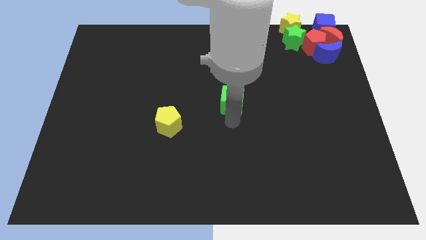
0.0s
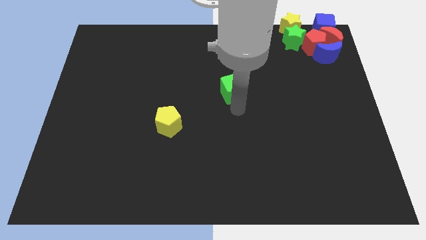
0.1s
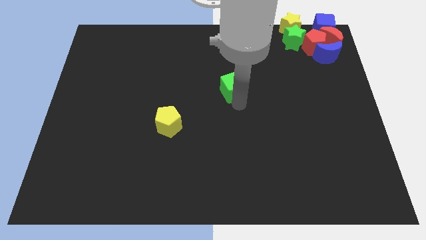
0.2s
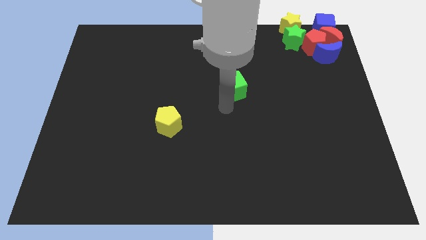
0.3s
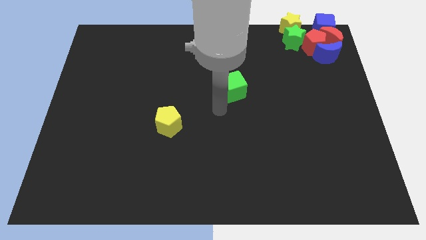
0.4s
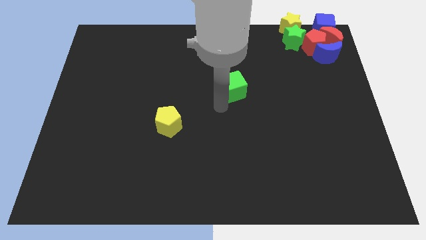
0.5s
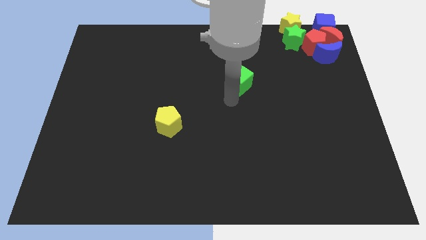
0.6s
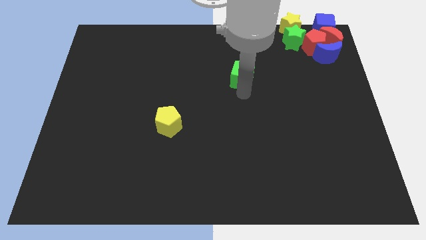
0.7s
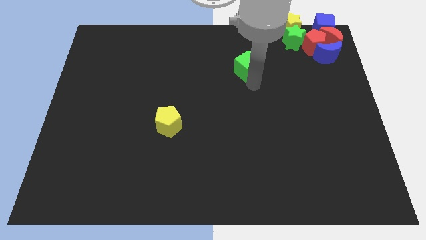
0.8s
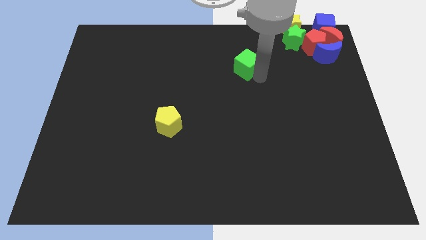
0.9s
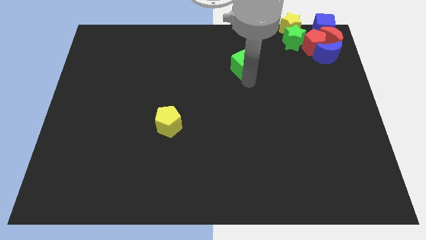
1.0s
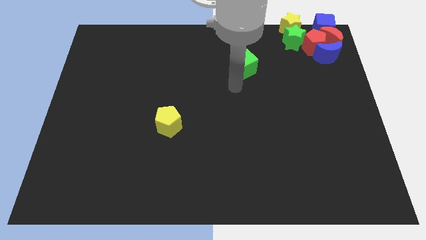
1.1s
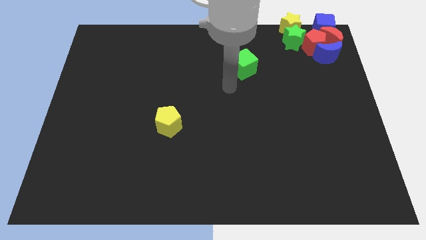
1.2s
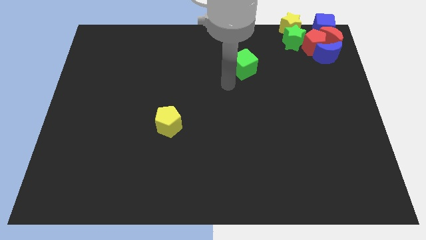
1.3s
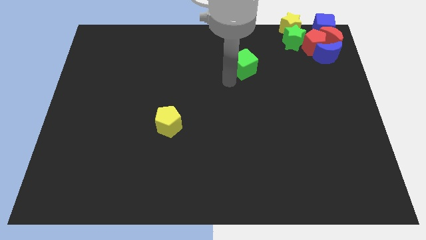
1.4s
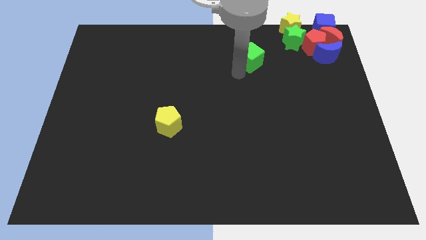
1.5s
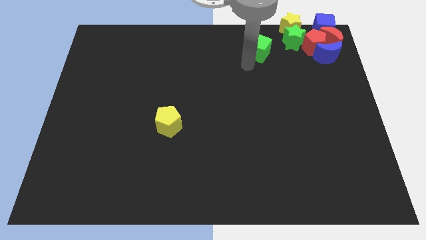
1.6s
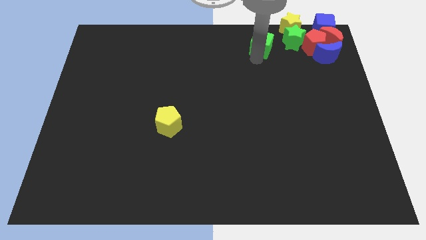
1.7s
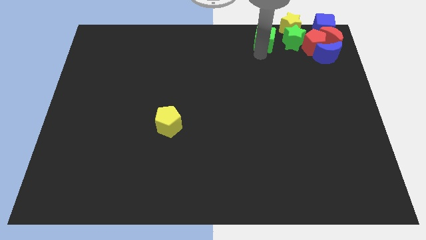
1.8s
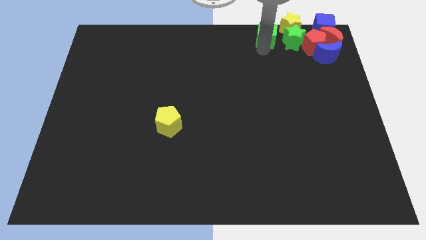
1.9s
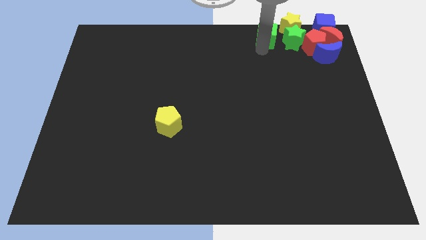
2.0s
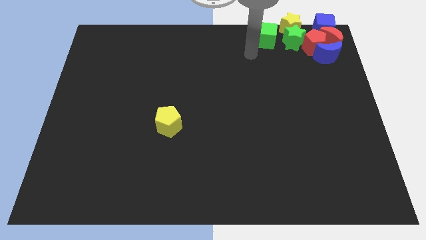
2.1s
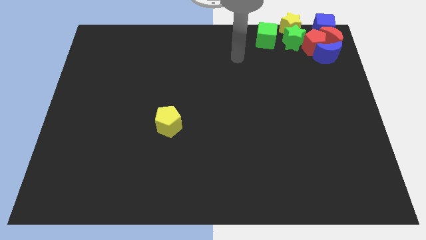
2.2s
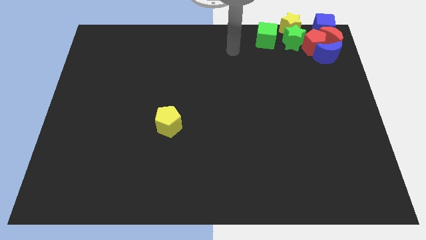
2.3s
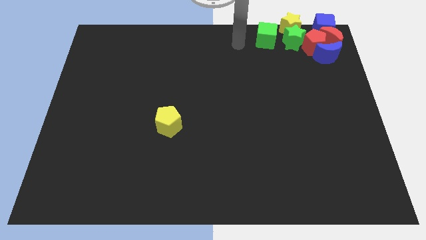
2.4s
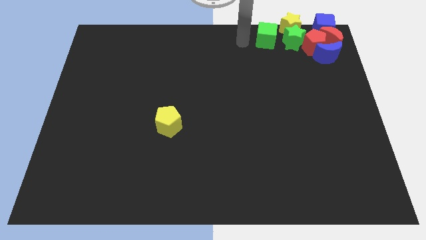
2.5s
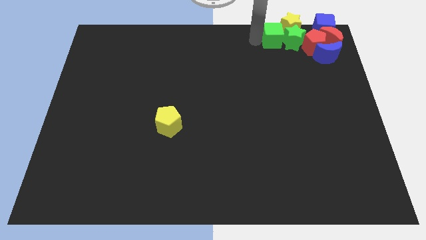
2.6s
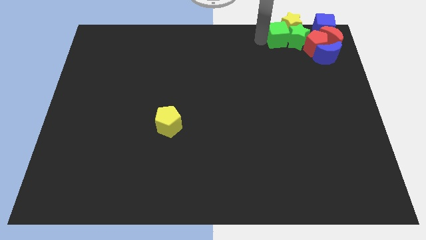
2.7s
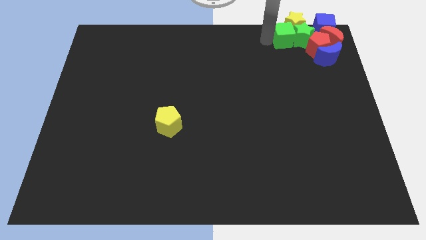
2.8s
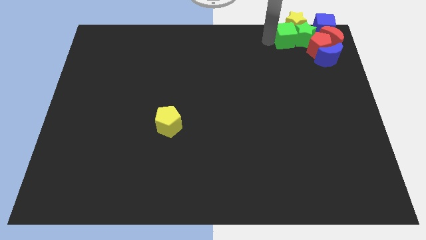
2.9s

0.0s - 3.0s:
move green cube left beside the green star

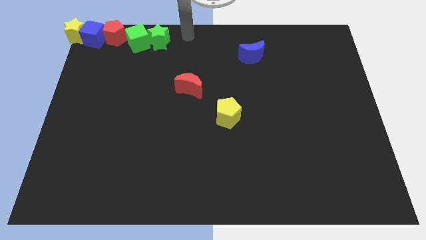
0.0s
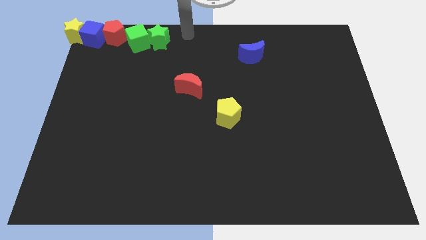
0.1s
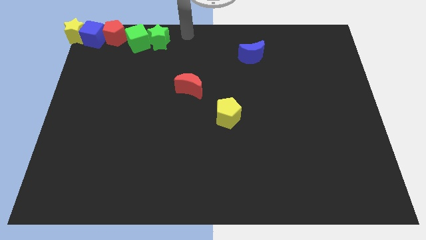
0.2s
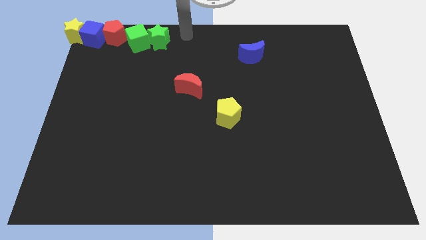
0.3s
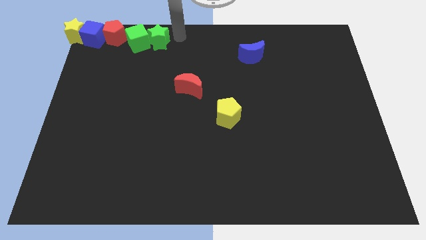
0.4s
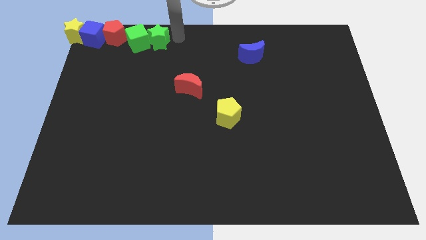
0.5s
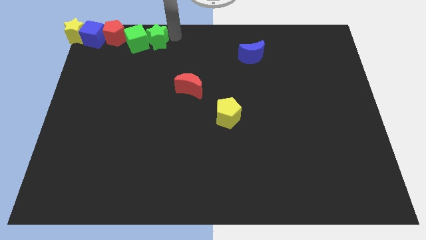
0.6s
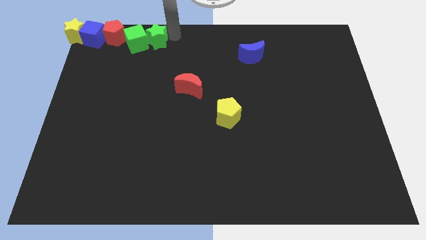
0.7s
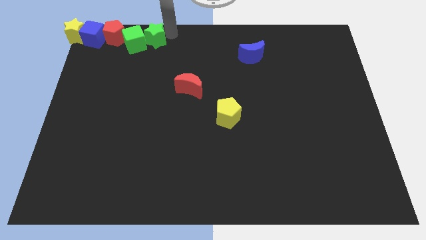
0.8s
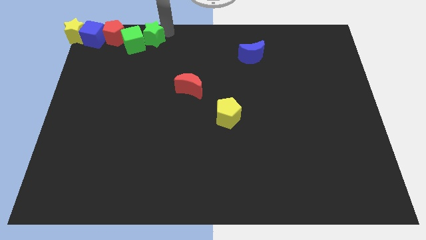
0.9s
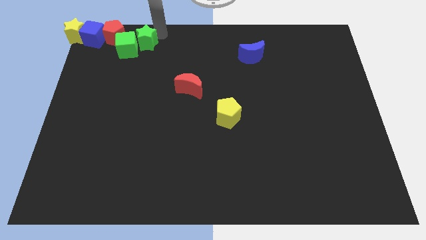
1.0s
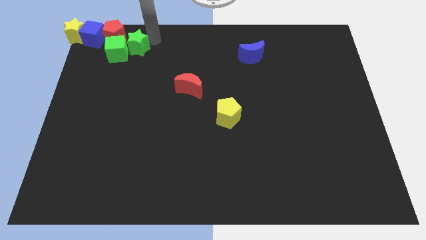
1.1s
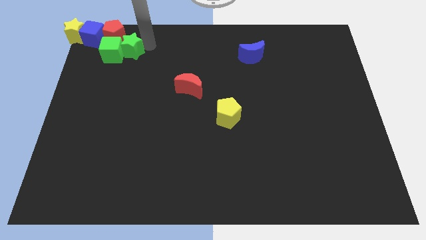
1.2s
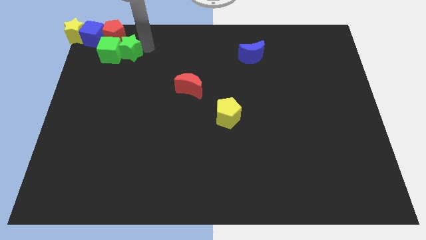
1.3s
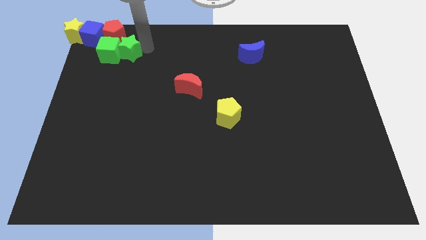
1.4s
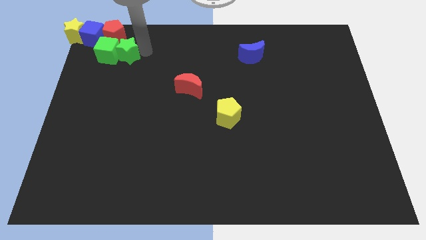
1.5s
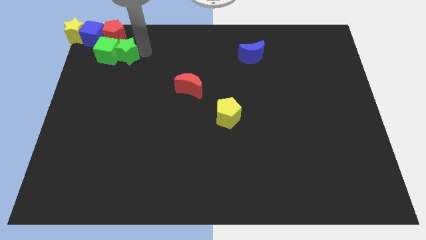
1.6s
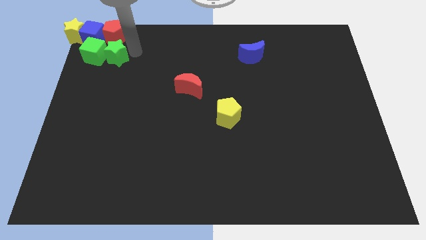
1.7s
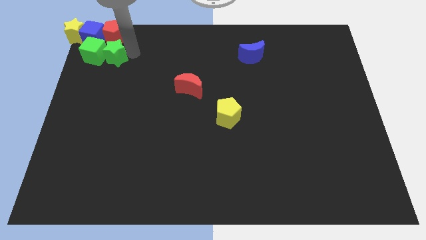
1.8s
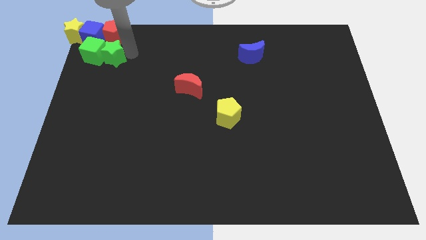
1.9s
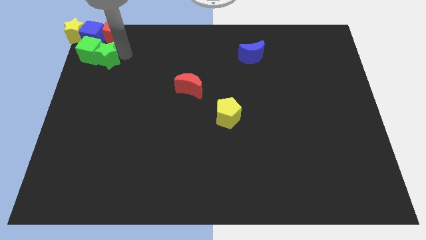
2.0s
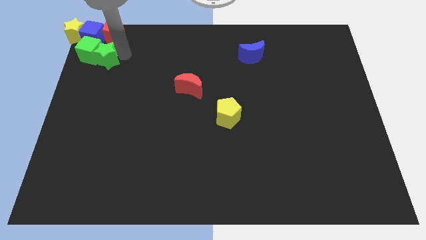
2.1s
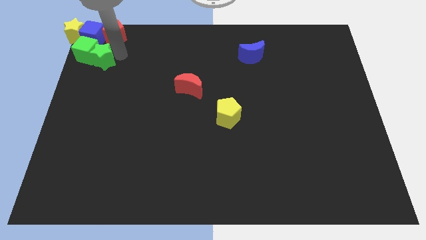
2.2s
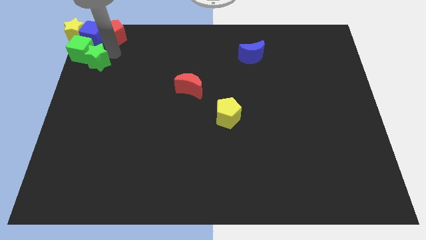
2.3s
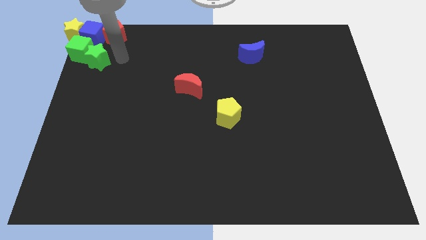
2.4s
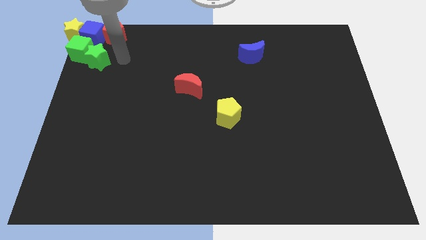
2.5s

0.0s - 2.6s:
push the green star and cube to the bottom of the blue cube and yellow star

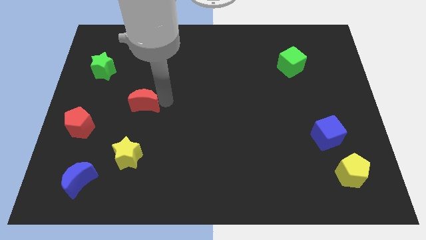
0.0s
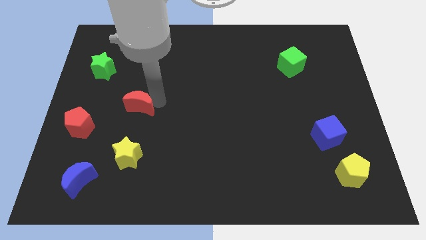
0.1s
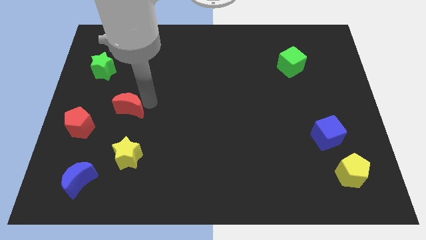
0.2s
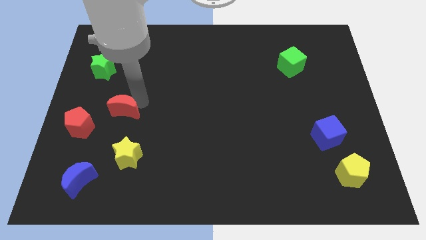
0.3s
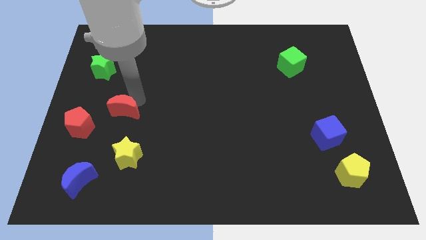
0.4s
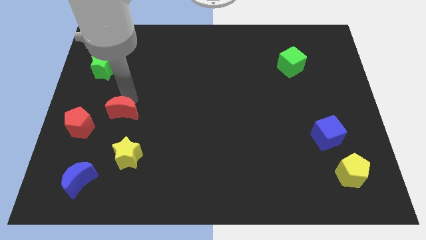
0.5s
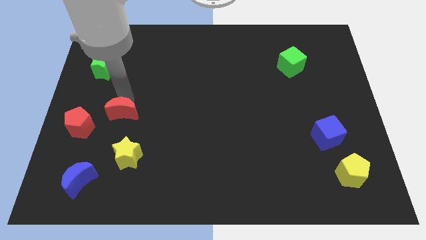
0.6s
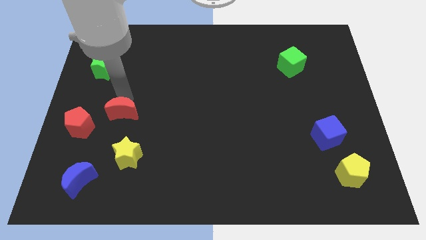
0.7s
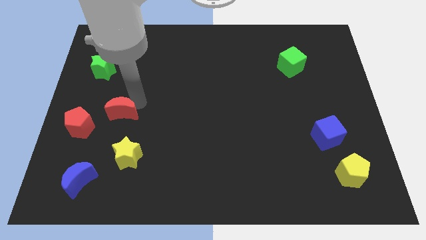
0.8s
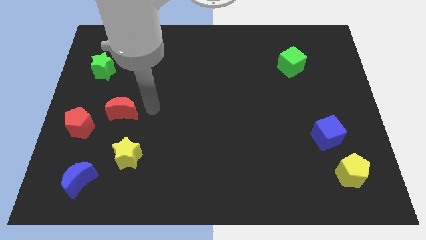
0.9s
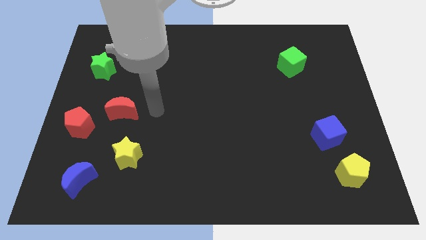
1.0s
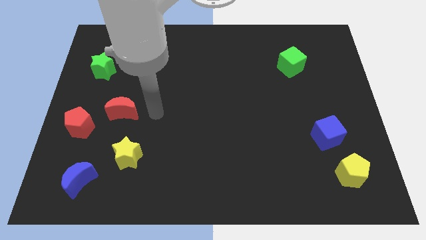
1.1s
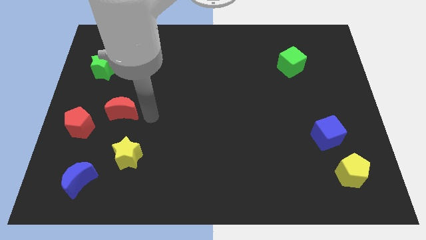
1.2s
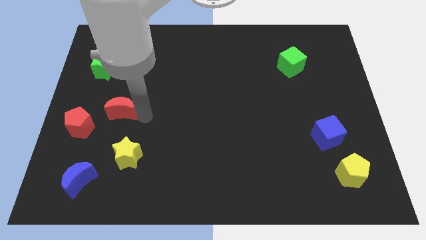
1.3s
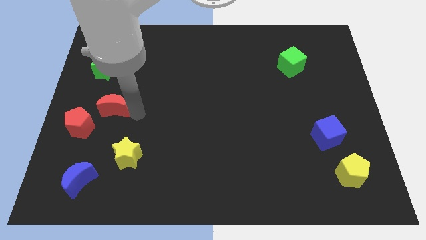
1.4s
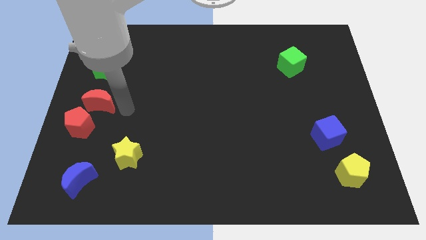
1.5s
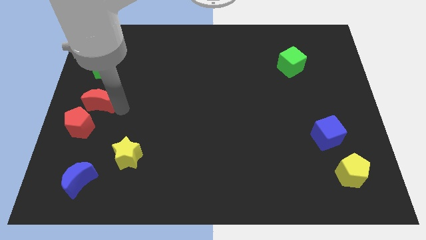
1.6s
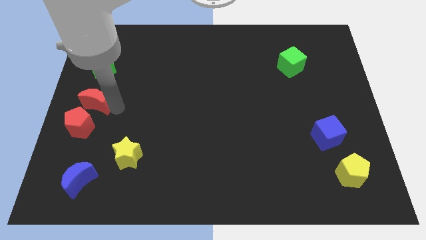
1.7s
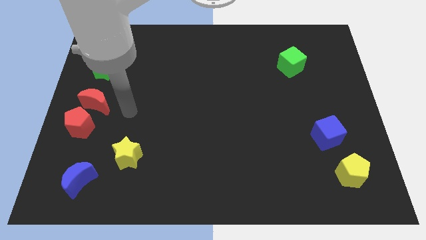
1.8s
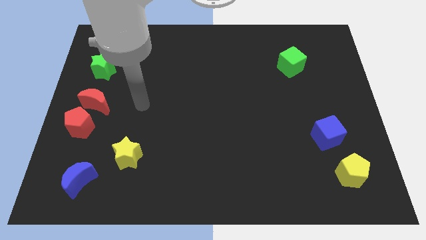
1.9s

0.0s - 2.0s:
place red crescent on top of red penatgon

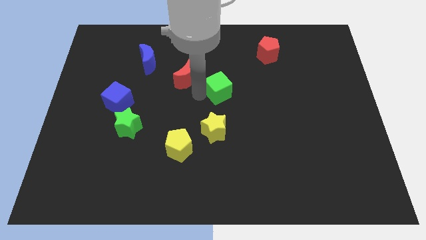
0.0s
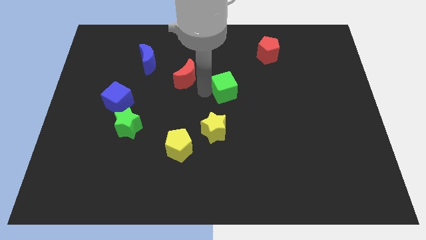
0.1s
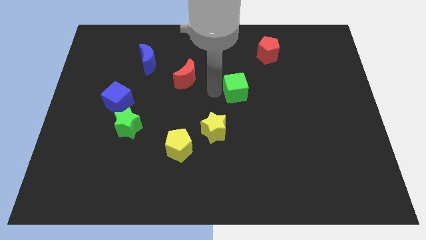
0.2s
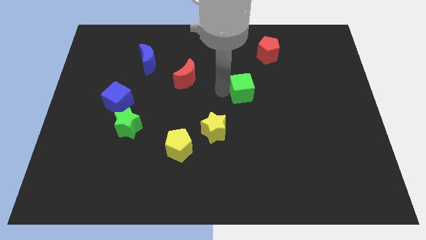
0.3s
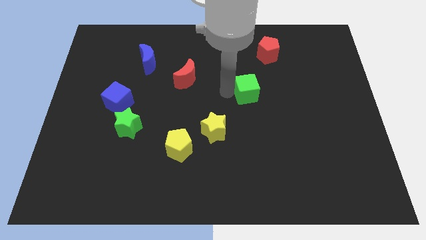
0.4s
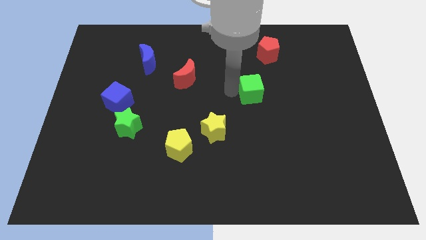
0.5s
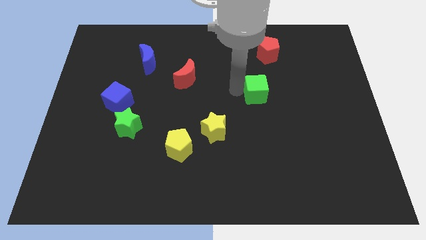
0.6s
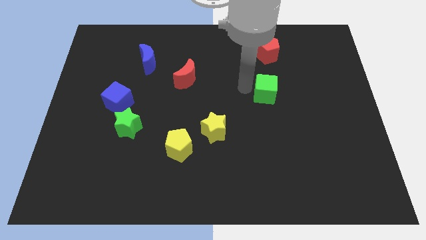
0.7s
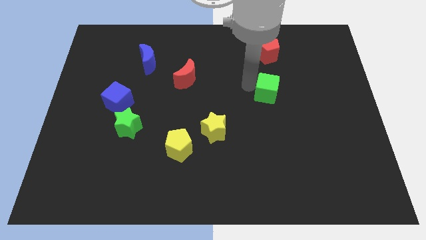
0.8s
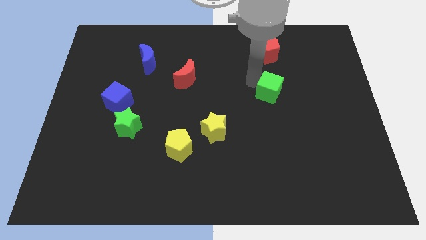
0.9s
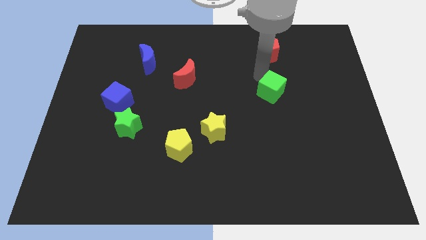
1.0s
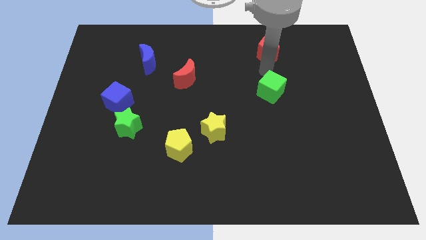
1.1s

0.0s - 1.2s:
move the green cube slightly to the right

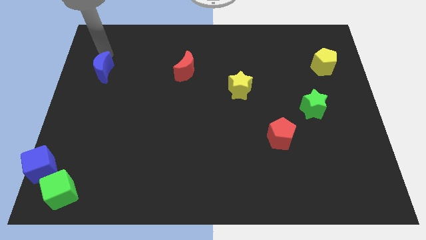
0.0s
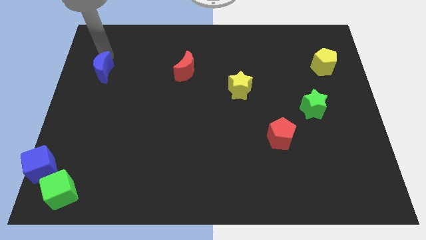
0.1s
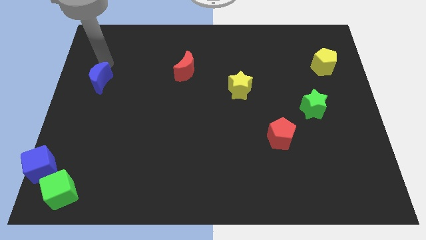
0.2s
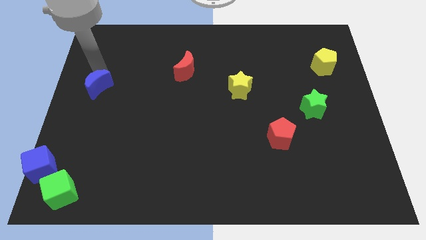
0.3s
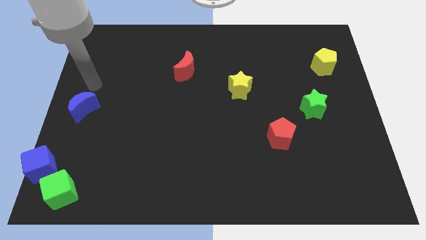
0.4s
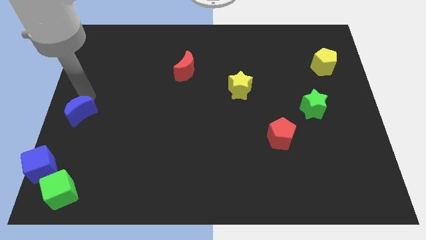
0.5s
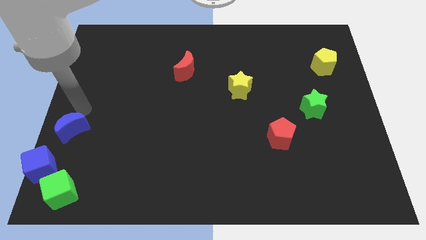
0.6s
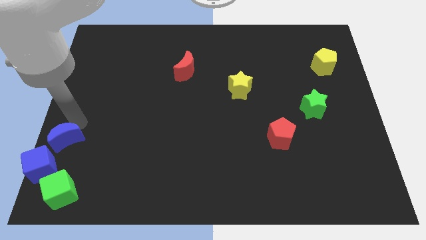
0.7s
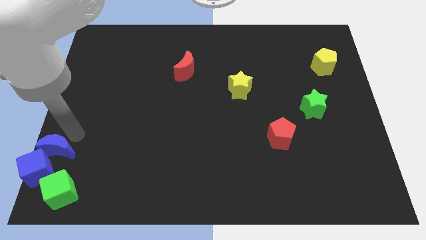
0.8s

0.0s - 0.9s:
move the blue moon diagonally top right to the blue cube
